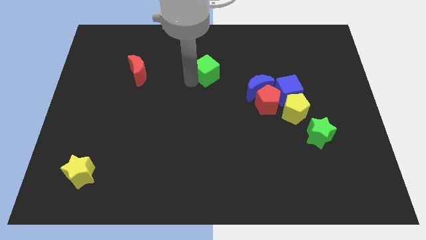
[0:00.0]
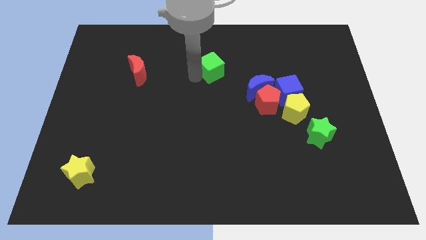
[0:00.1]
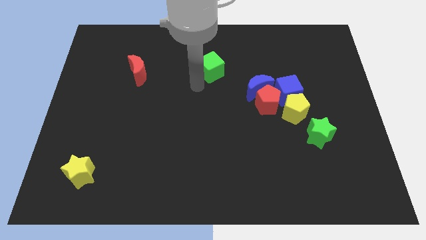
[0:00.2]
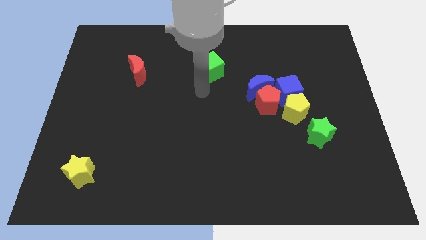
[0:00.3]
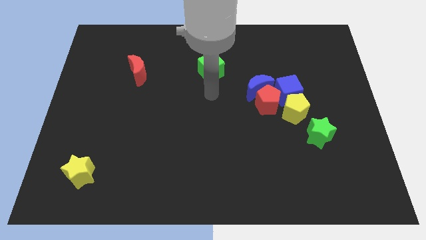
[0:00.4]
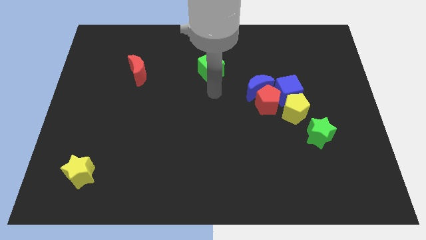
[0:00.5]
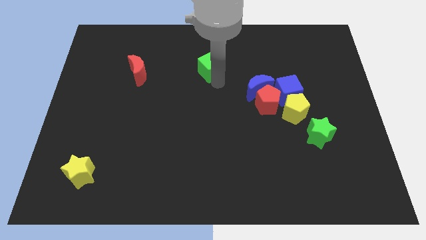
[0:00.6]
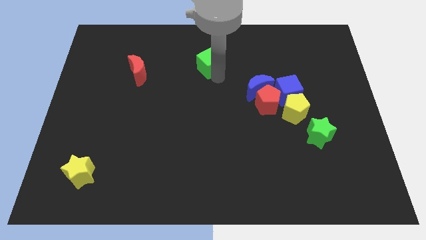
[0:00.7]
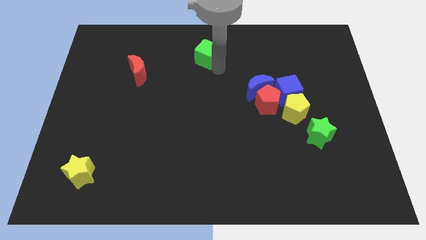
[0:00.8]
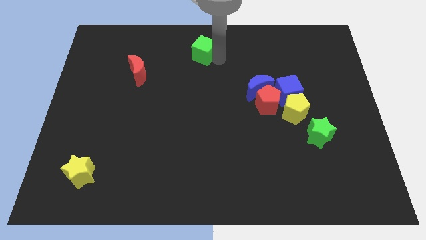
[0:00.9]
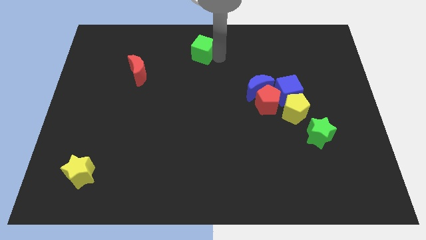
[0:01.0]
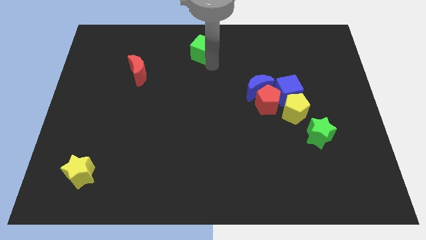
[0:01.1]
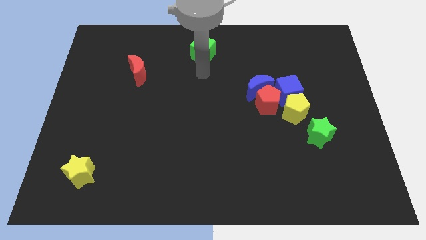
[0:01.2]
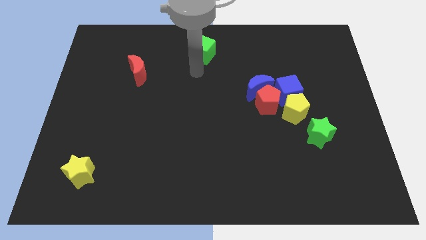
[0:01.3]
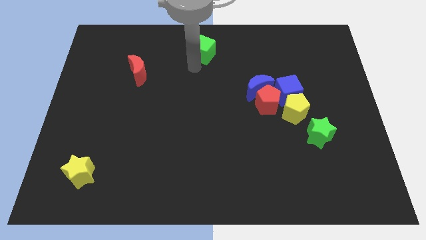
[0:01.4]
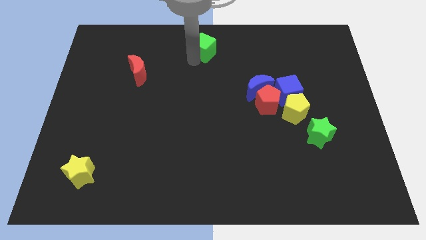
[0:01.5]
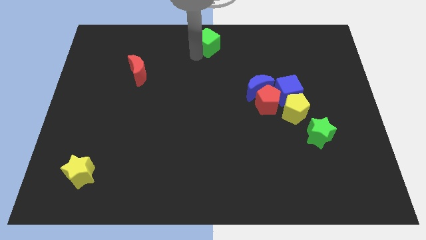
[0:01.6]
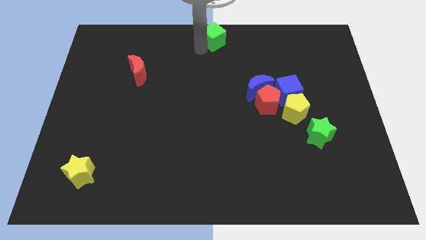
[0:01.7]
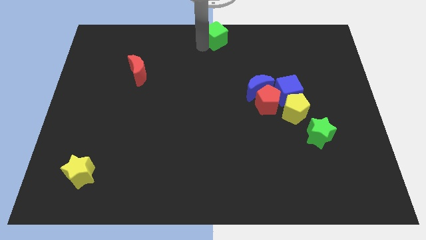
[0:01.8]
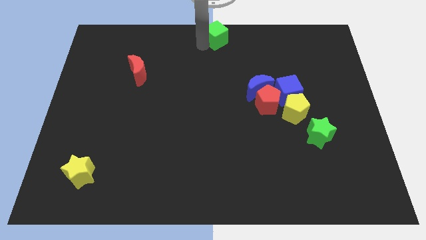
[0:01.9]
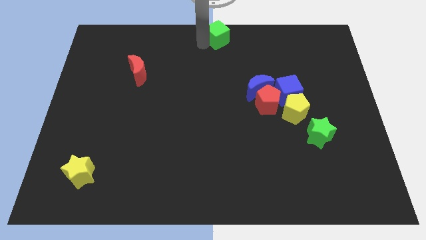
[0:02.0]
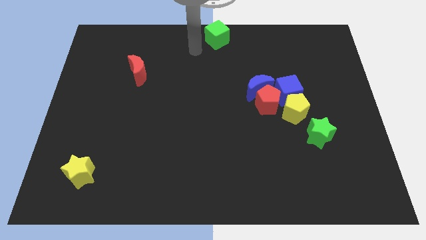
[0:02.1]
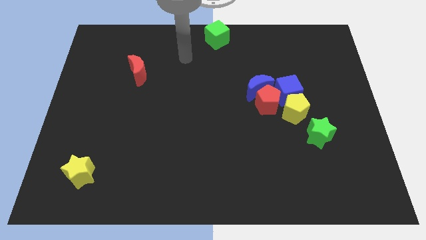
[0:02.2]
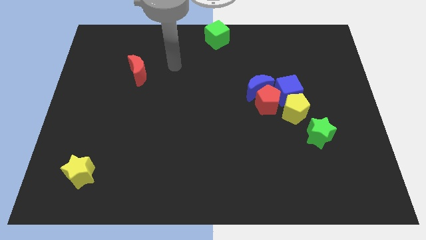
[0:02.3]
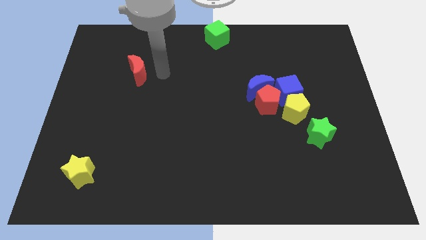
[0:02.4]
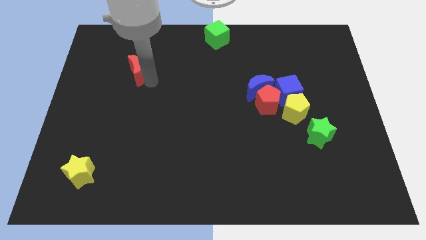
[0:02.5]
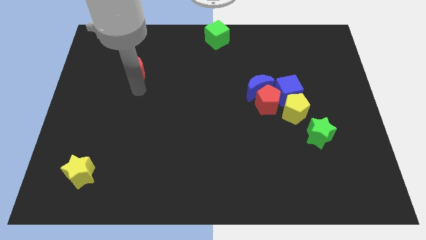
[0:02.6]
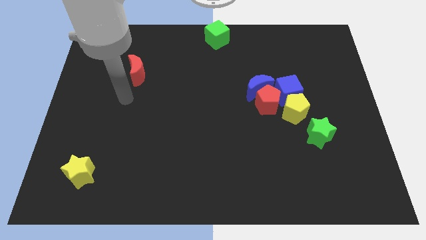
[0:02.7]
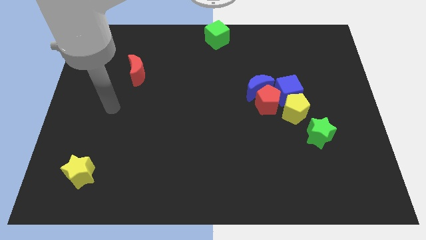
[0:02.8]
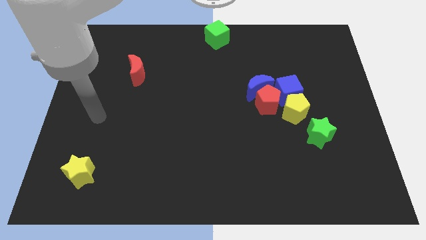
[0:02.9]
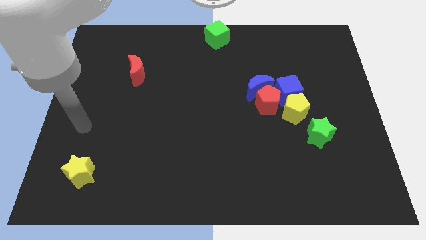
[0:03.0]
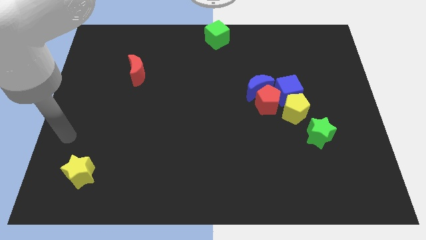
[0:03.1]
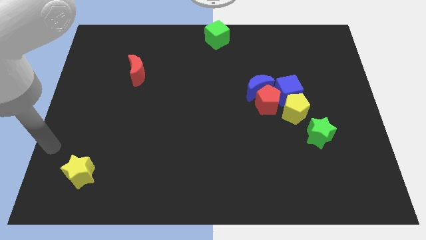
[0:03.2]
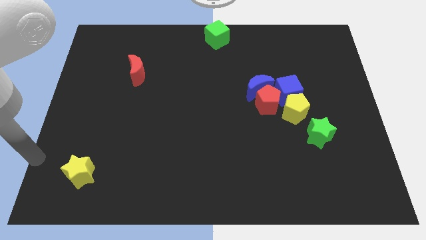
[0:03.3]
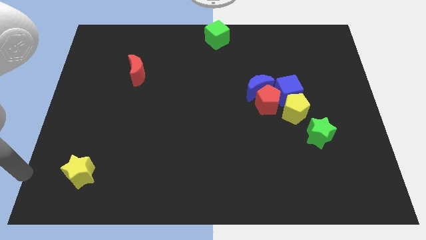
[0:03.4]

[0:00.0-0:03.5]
put the green cube diagonally top right to the red moon

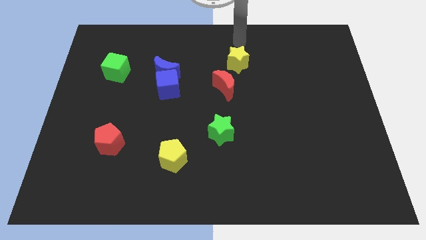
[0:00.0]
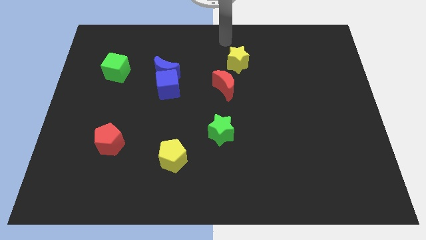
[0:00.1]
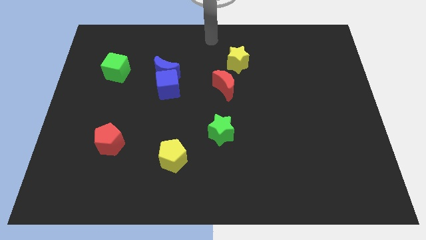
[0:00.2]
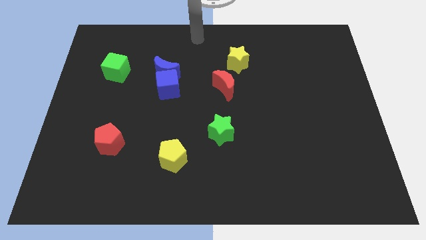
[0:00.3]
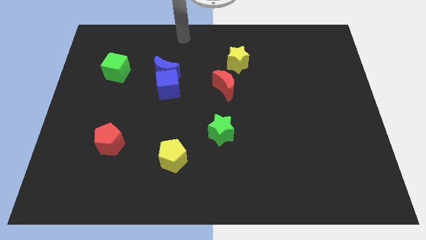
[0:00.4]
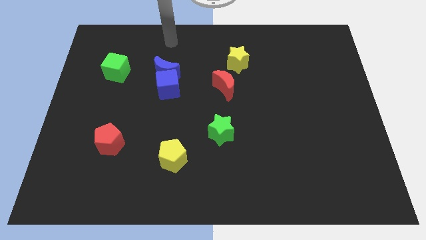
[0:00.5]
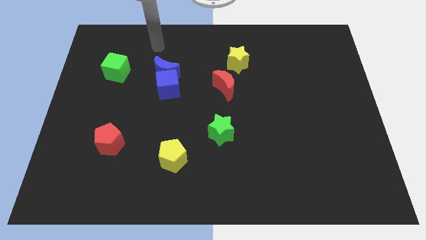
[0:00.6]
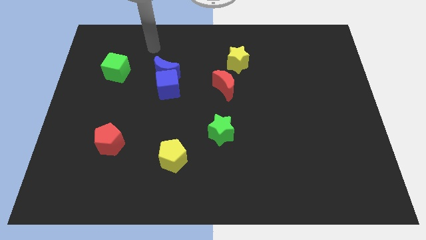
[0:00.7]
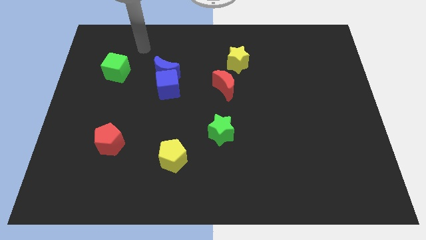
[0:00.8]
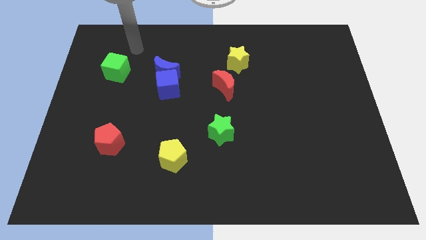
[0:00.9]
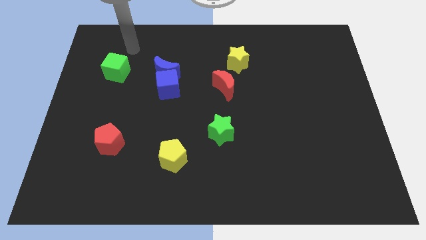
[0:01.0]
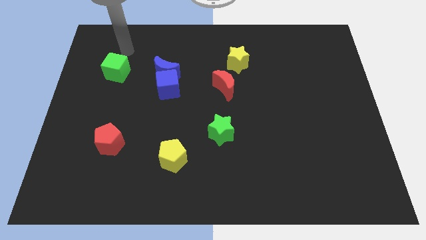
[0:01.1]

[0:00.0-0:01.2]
move the arm towards the green cube

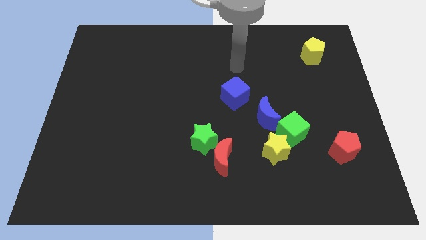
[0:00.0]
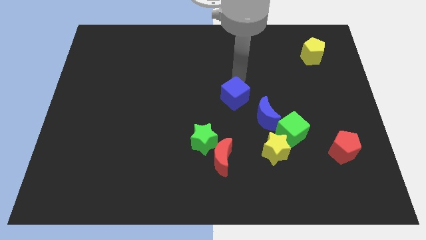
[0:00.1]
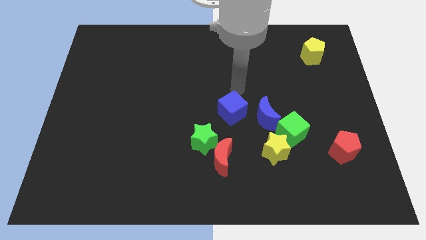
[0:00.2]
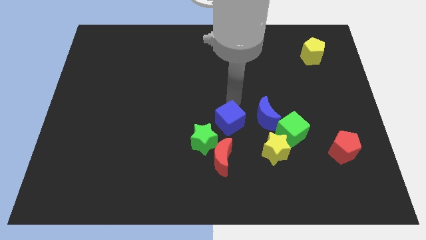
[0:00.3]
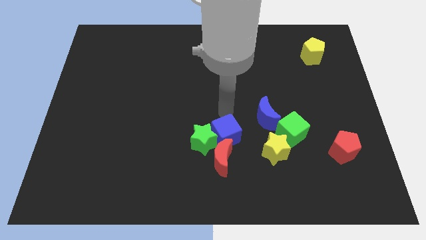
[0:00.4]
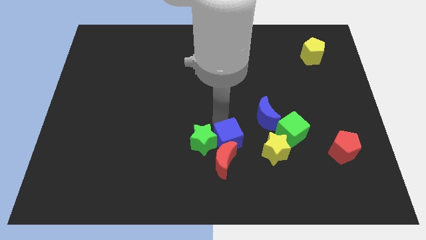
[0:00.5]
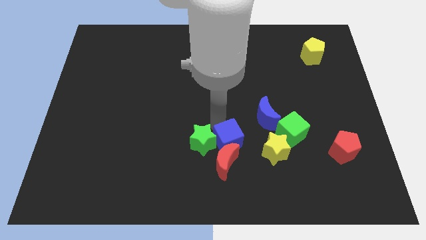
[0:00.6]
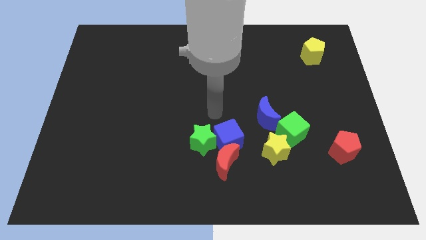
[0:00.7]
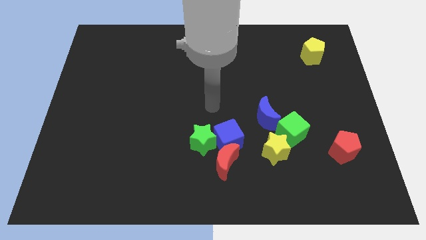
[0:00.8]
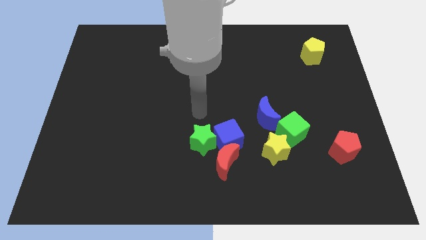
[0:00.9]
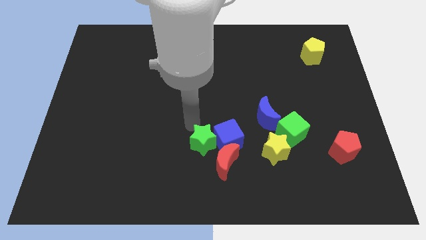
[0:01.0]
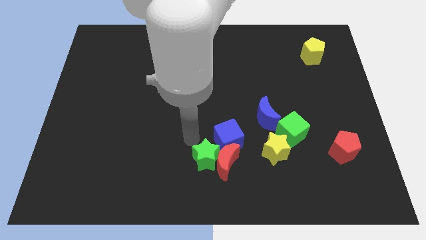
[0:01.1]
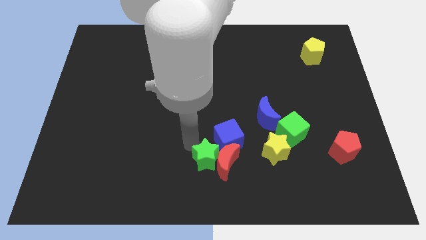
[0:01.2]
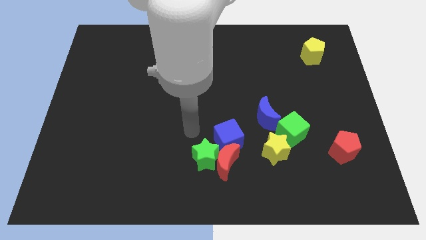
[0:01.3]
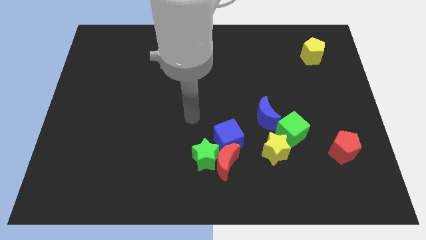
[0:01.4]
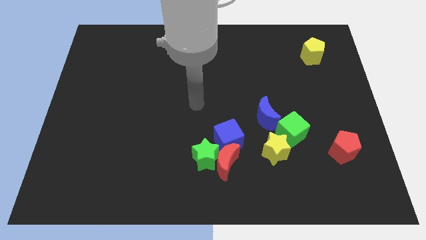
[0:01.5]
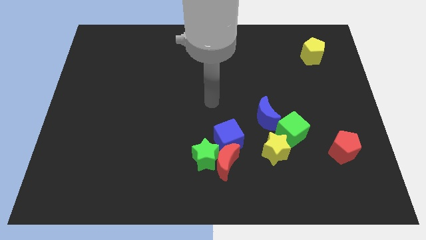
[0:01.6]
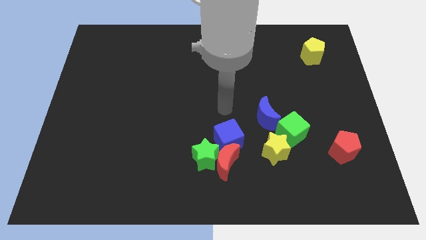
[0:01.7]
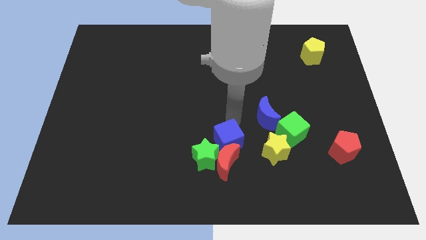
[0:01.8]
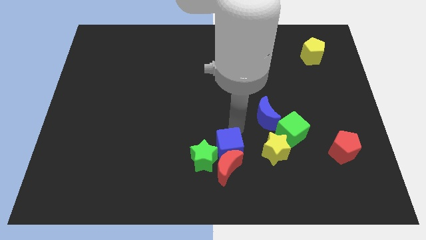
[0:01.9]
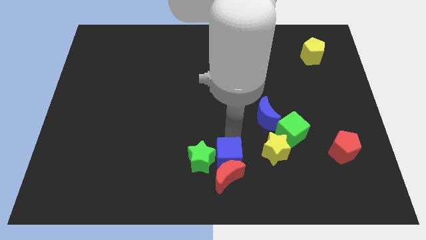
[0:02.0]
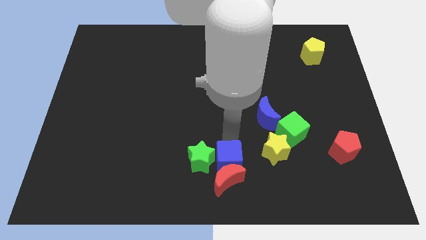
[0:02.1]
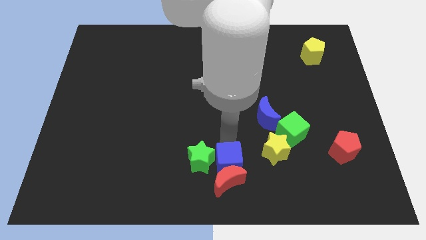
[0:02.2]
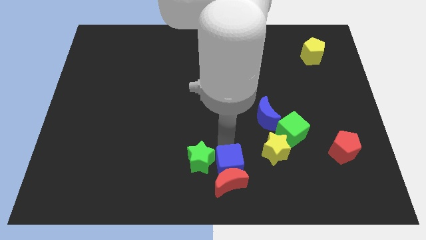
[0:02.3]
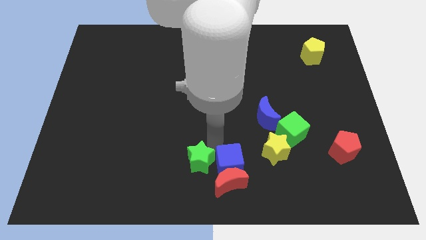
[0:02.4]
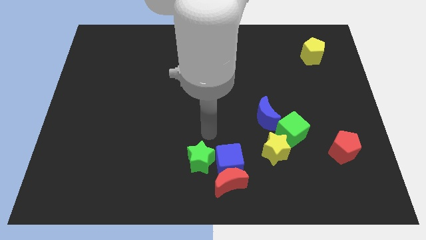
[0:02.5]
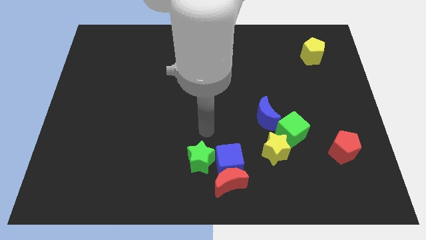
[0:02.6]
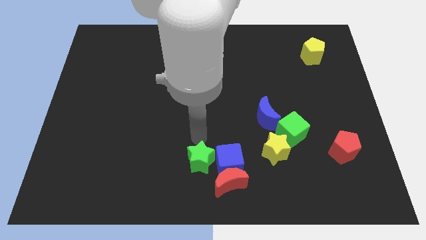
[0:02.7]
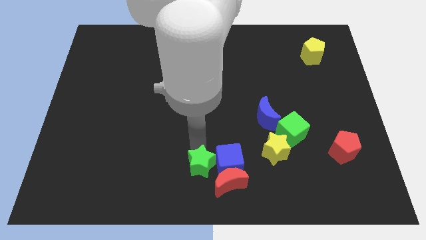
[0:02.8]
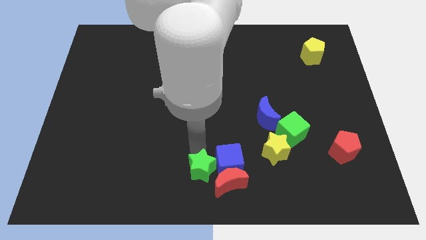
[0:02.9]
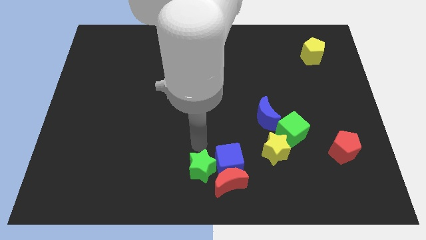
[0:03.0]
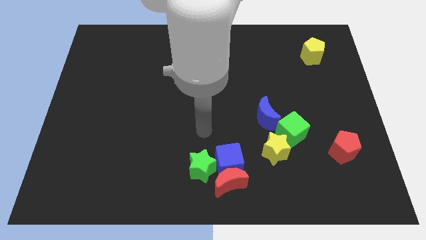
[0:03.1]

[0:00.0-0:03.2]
push the blue cube into the red crescent

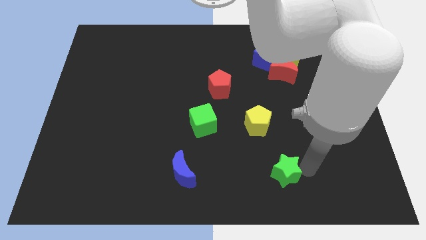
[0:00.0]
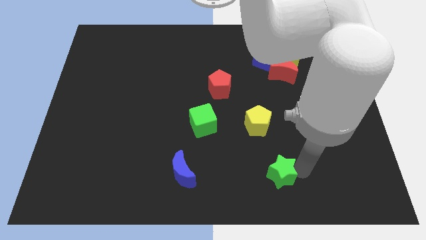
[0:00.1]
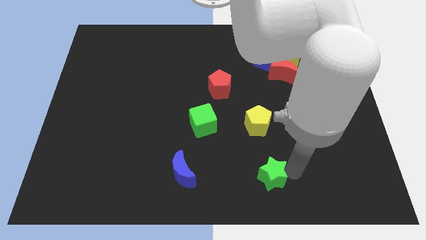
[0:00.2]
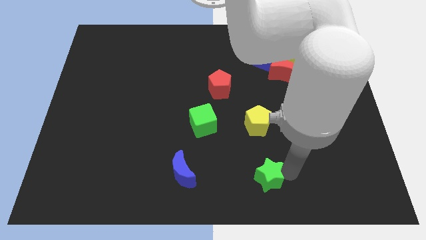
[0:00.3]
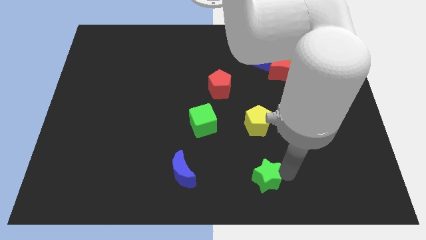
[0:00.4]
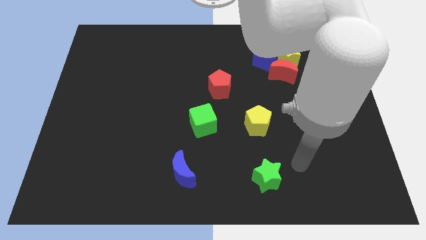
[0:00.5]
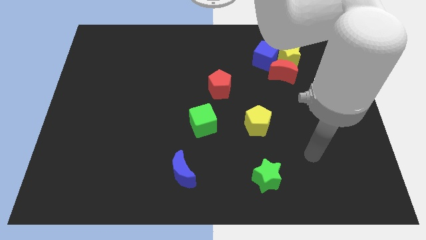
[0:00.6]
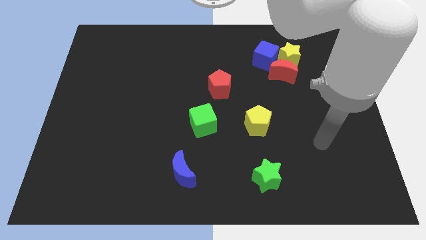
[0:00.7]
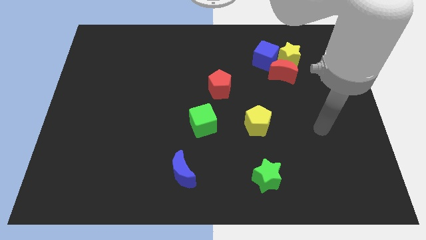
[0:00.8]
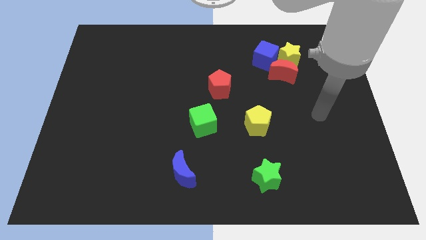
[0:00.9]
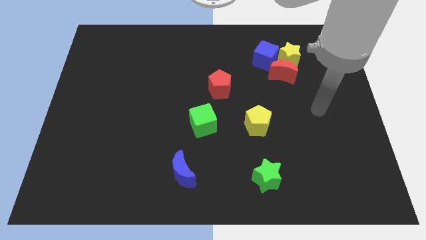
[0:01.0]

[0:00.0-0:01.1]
drag the green star towards left
